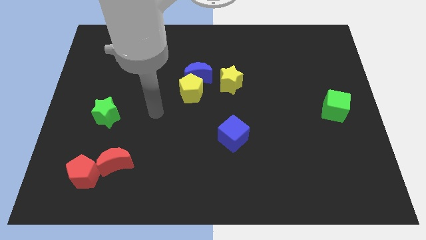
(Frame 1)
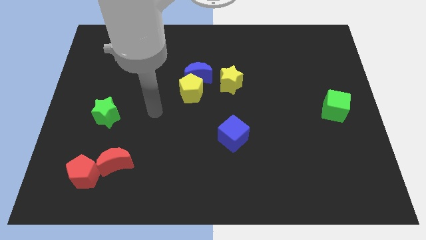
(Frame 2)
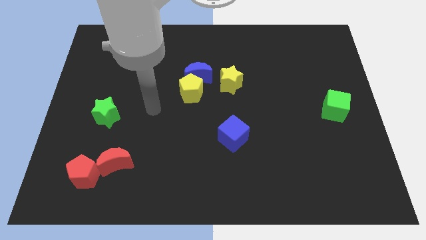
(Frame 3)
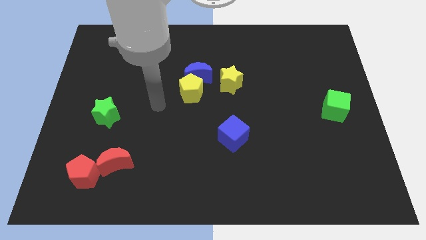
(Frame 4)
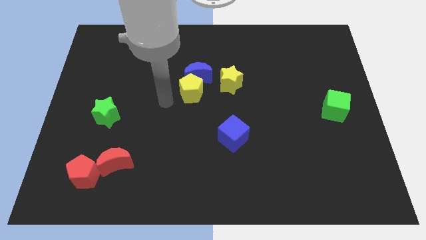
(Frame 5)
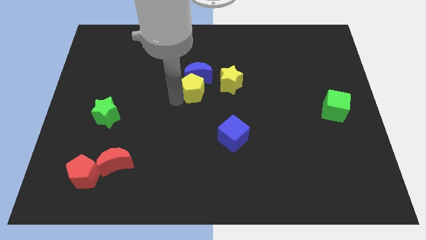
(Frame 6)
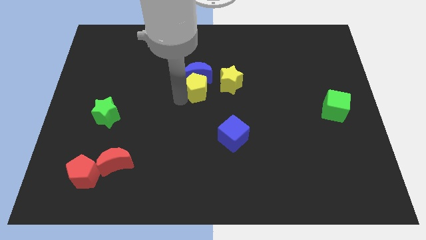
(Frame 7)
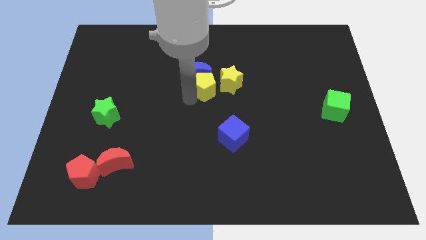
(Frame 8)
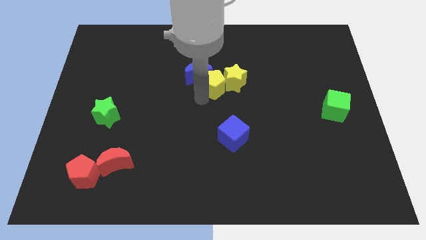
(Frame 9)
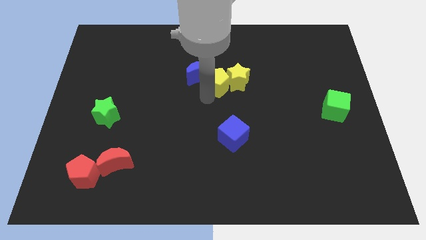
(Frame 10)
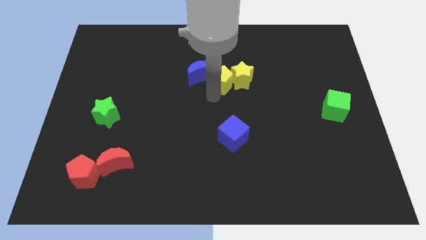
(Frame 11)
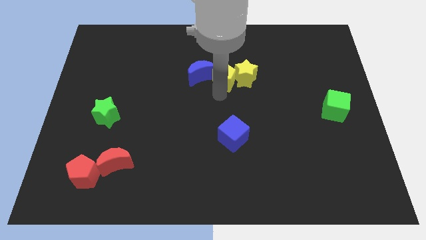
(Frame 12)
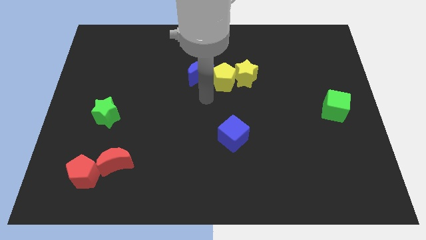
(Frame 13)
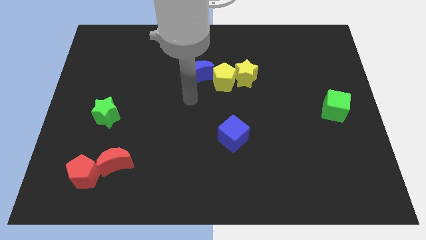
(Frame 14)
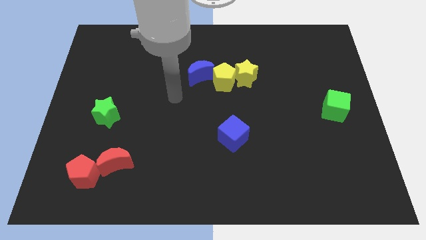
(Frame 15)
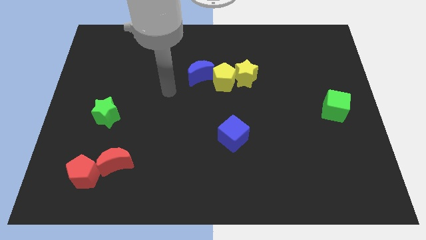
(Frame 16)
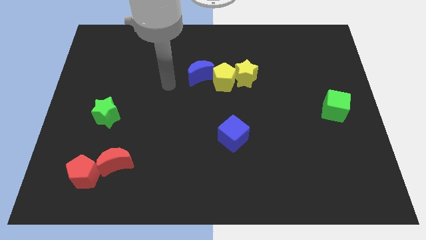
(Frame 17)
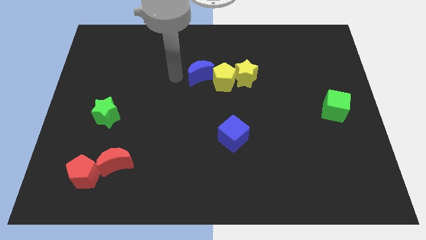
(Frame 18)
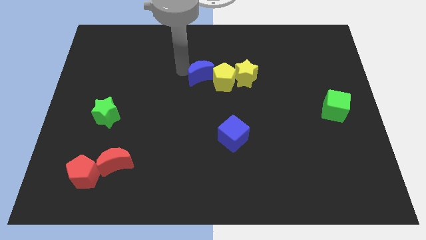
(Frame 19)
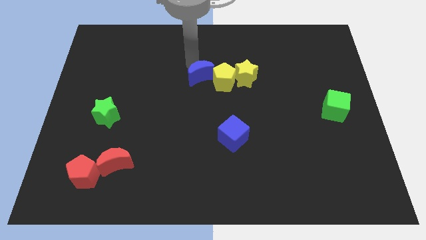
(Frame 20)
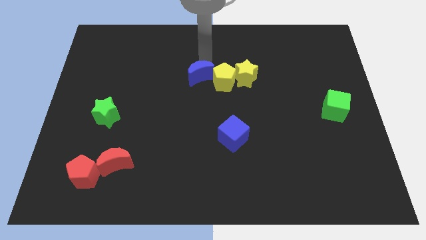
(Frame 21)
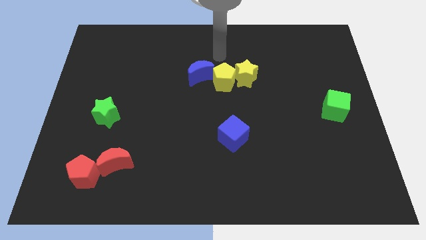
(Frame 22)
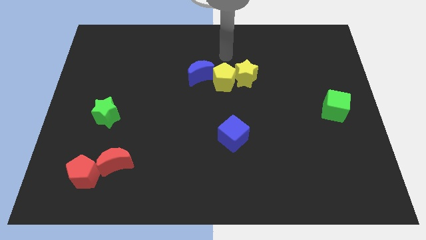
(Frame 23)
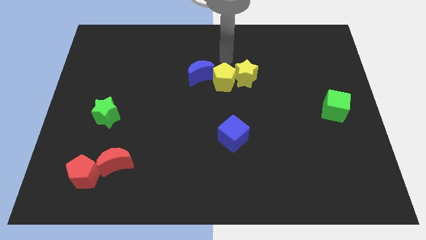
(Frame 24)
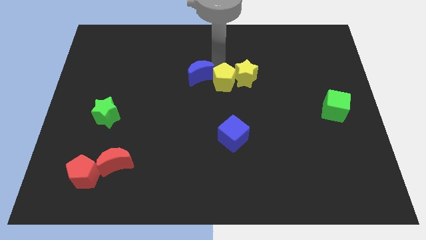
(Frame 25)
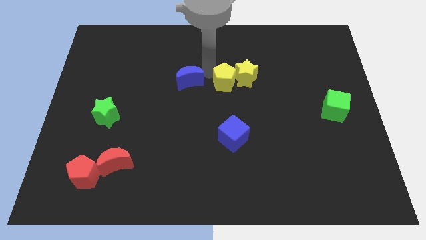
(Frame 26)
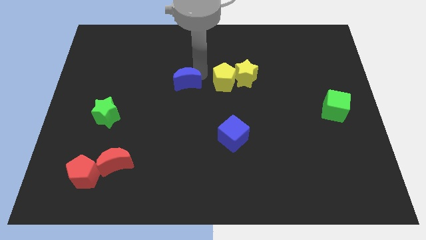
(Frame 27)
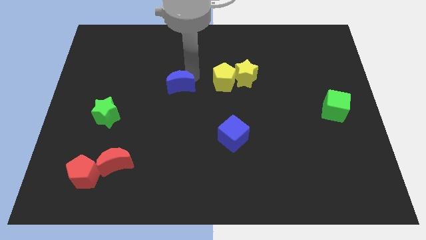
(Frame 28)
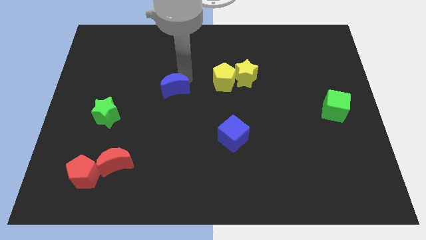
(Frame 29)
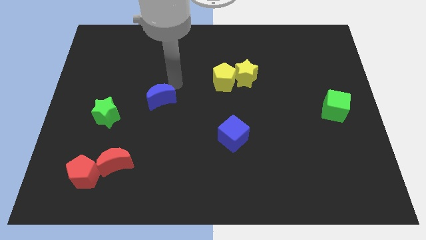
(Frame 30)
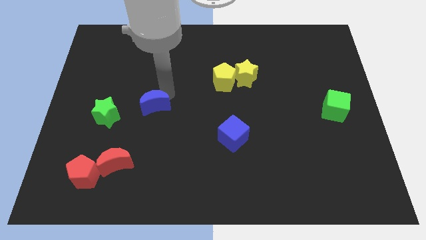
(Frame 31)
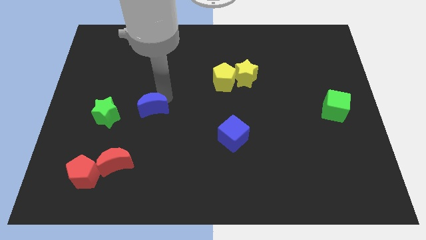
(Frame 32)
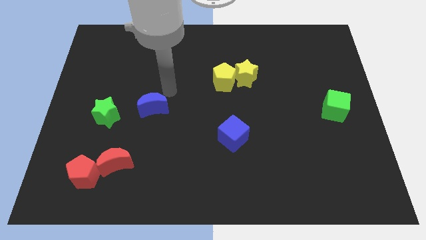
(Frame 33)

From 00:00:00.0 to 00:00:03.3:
place the blue moon right to the green star

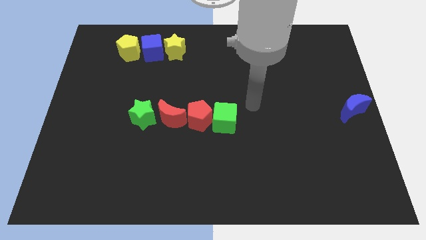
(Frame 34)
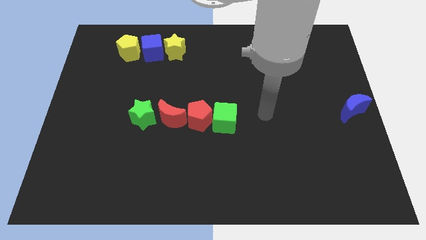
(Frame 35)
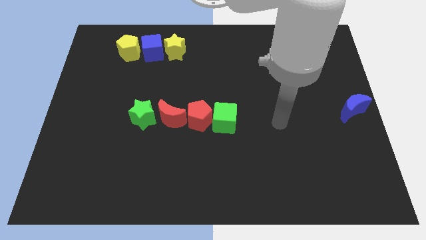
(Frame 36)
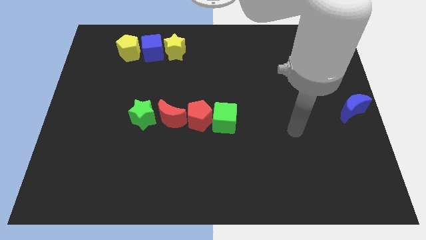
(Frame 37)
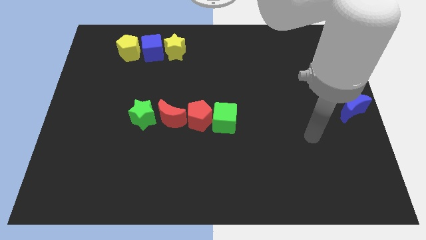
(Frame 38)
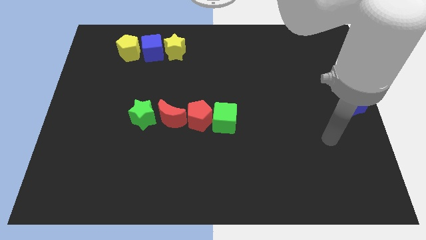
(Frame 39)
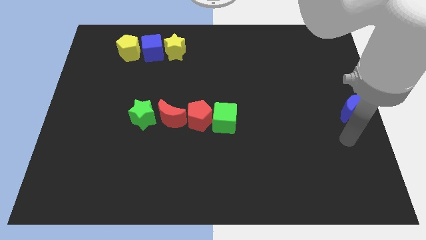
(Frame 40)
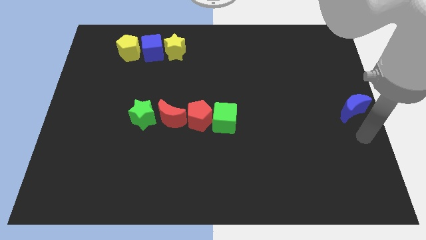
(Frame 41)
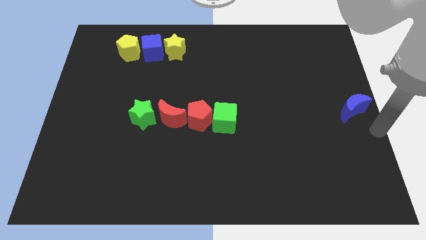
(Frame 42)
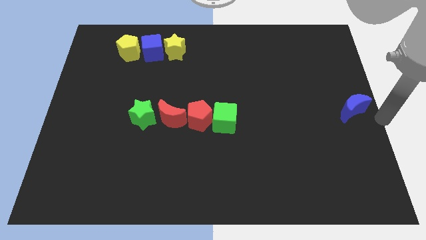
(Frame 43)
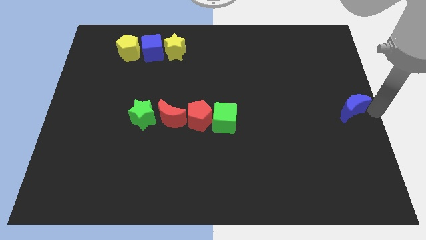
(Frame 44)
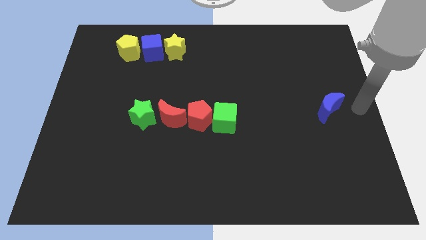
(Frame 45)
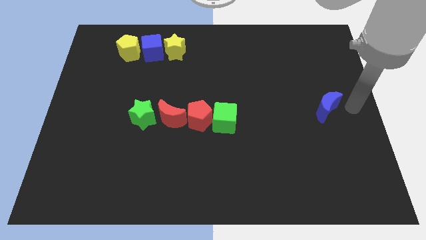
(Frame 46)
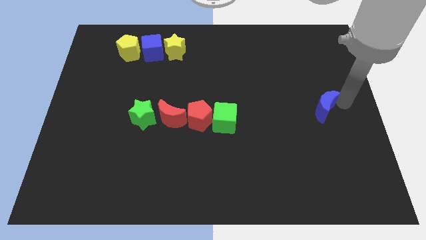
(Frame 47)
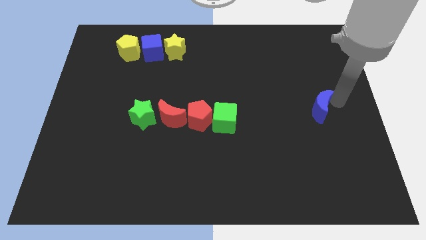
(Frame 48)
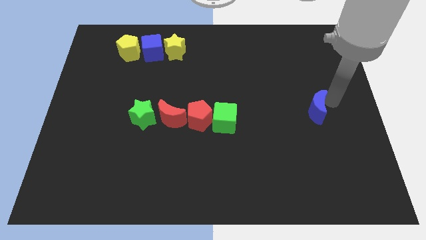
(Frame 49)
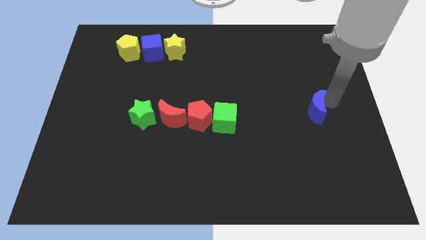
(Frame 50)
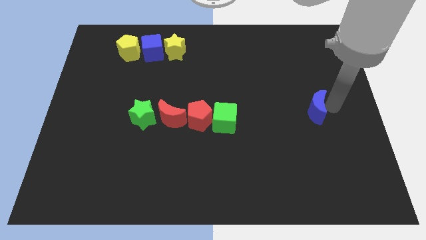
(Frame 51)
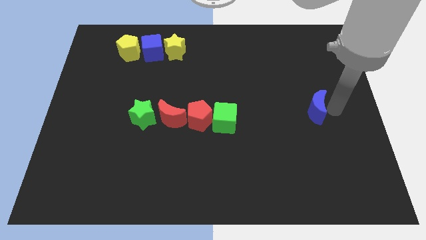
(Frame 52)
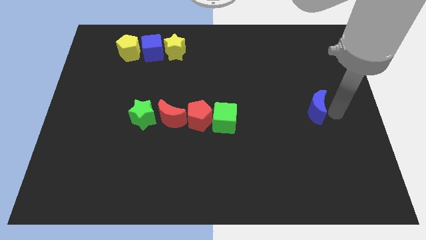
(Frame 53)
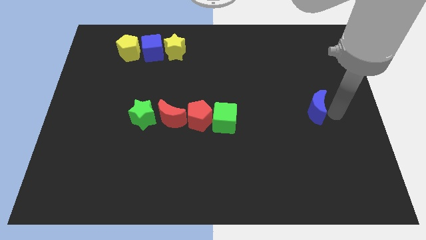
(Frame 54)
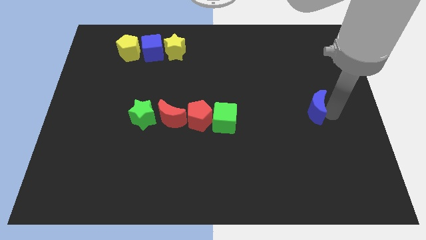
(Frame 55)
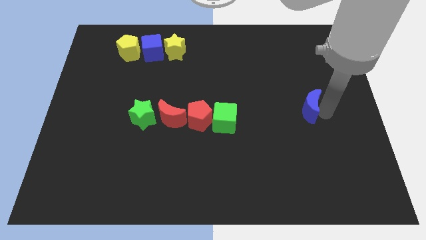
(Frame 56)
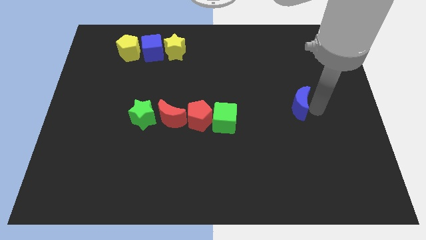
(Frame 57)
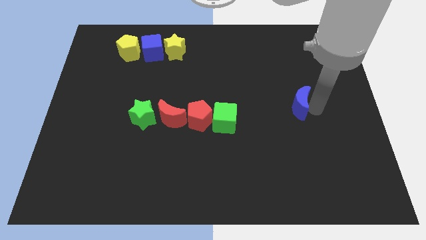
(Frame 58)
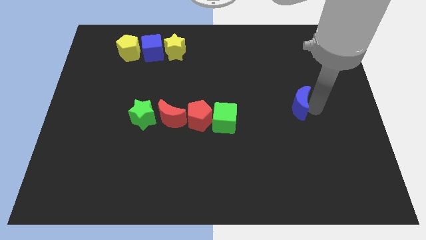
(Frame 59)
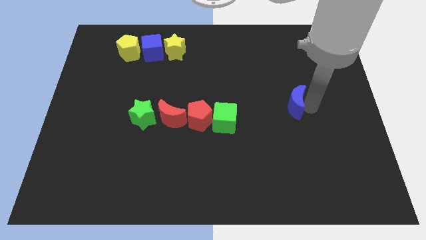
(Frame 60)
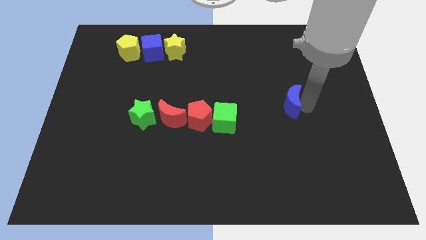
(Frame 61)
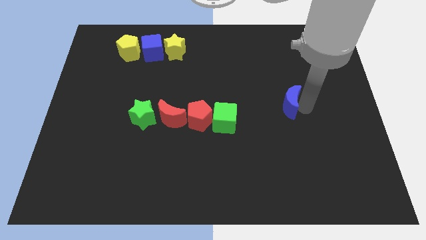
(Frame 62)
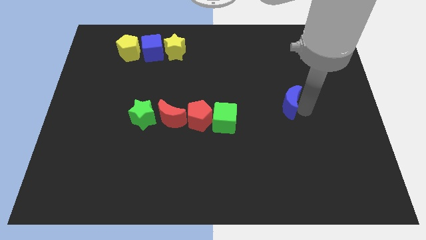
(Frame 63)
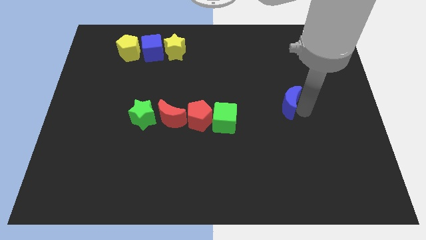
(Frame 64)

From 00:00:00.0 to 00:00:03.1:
push blue crescent towards the center

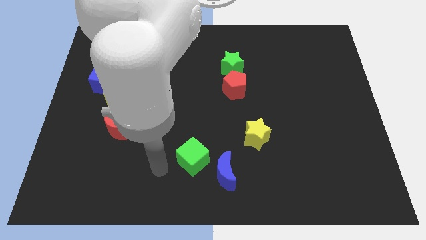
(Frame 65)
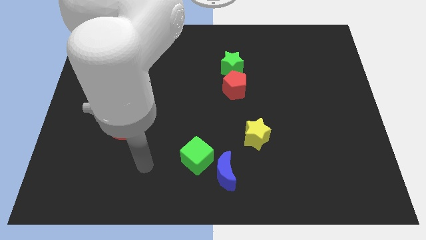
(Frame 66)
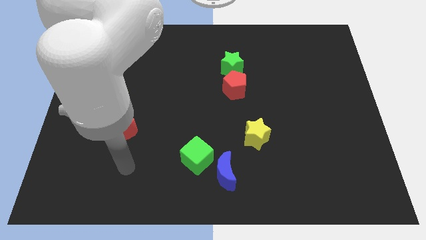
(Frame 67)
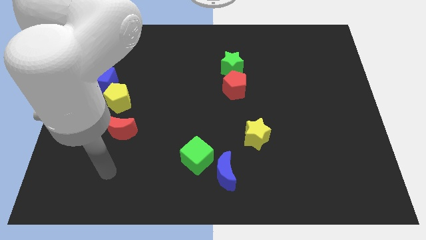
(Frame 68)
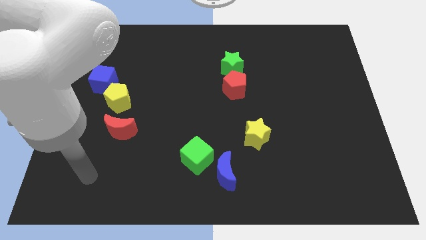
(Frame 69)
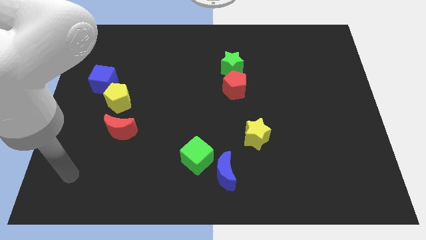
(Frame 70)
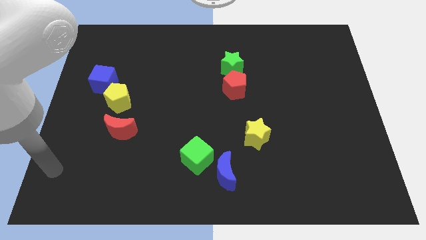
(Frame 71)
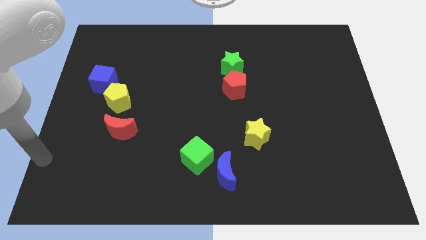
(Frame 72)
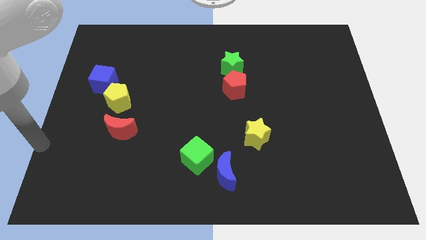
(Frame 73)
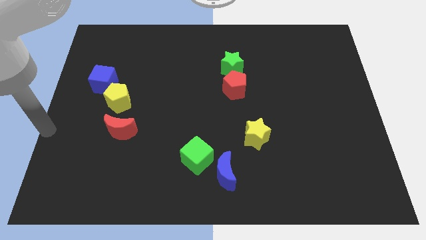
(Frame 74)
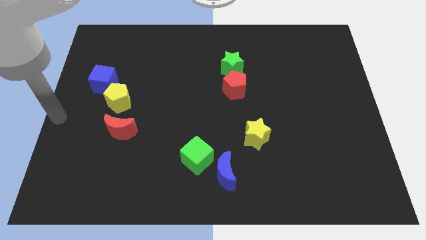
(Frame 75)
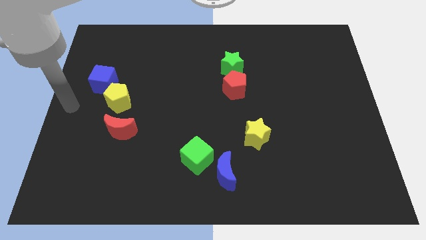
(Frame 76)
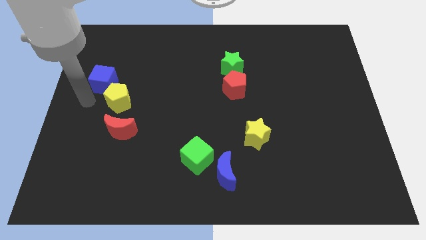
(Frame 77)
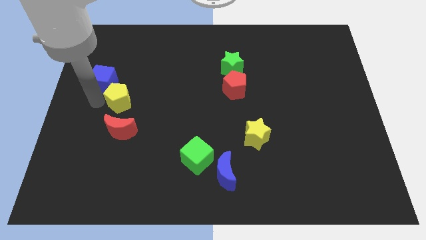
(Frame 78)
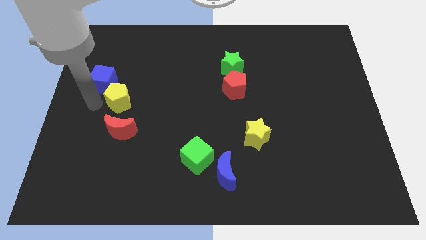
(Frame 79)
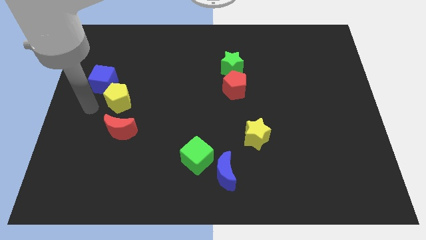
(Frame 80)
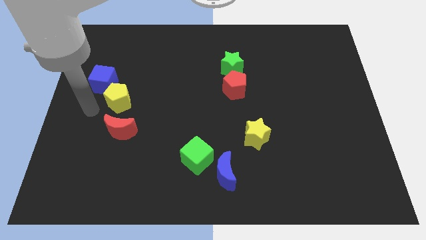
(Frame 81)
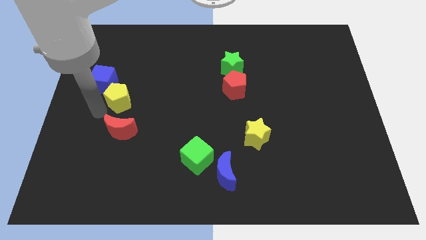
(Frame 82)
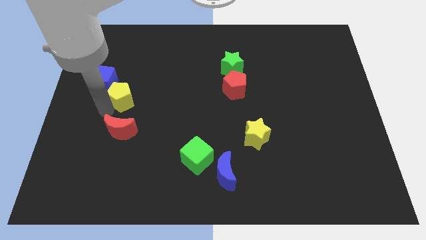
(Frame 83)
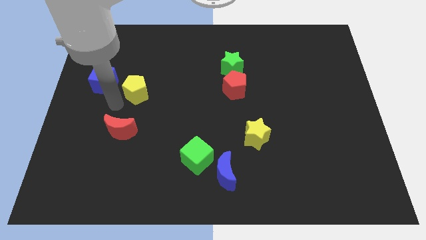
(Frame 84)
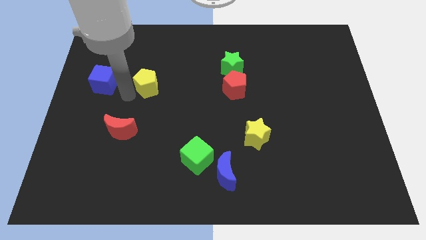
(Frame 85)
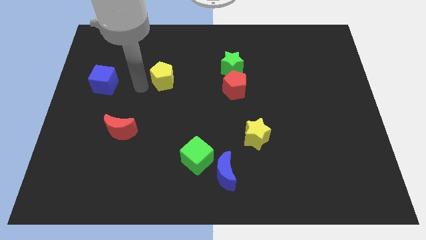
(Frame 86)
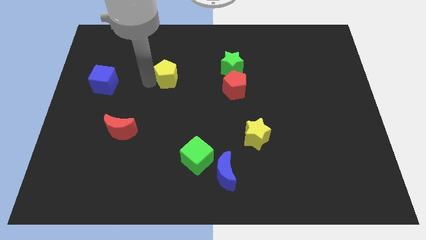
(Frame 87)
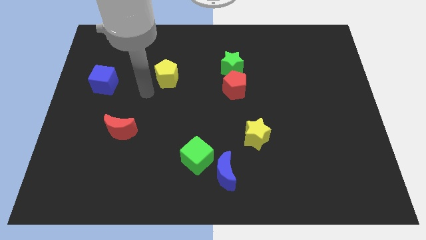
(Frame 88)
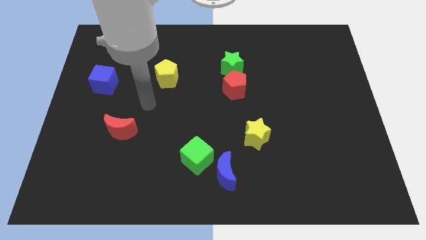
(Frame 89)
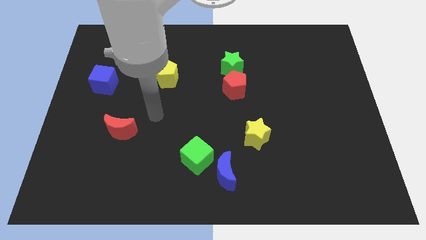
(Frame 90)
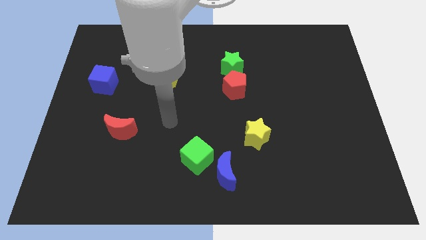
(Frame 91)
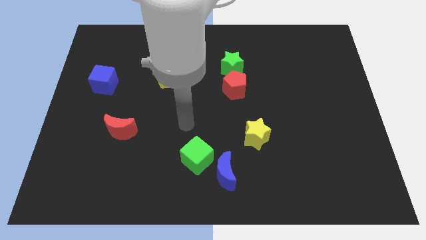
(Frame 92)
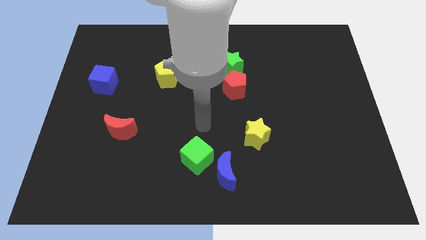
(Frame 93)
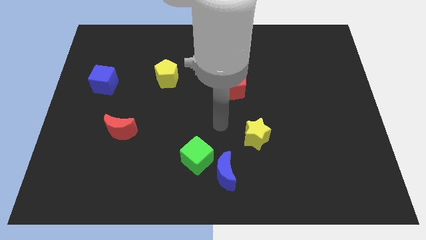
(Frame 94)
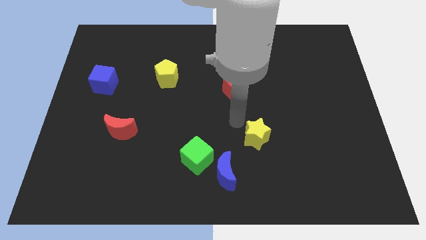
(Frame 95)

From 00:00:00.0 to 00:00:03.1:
place the yellow pentagon in between the blue cube and green star
